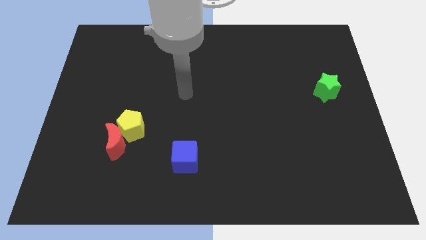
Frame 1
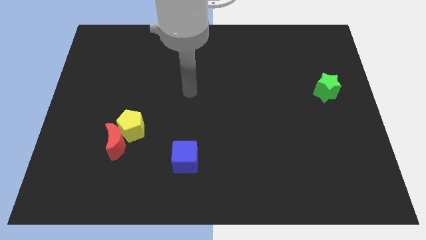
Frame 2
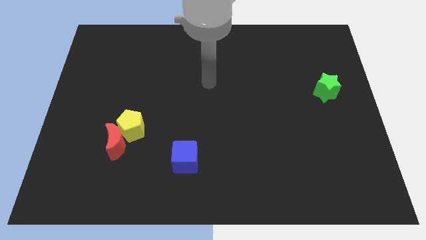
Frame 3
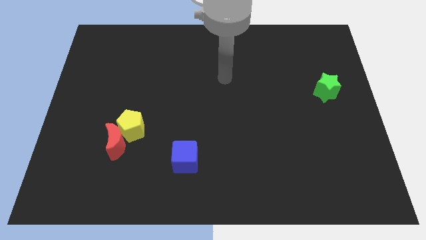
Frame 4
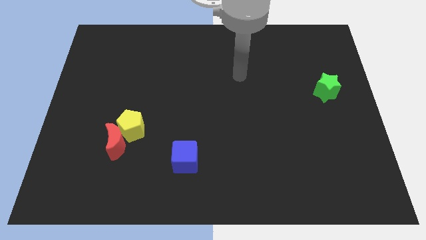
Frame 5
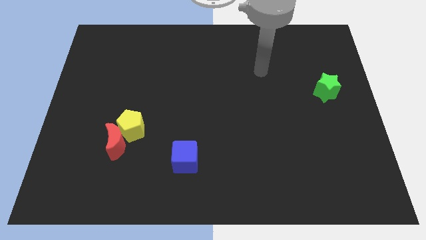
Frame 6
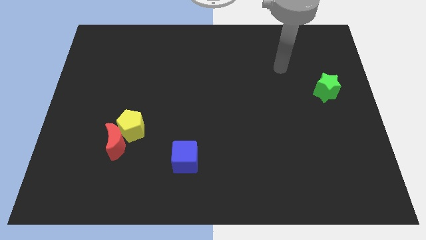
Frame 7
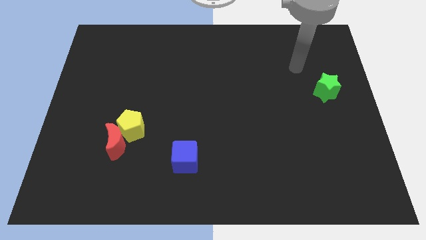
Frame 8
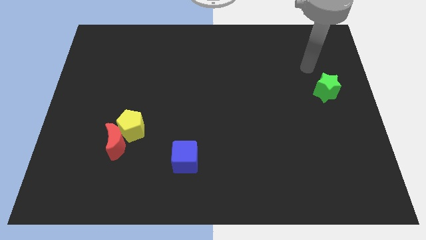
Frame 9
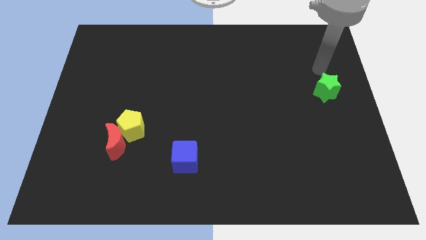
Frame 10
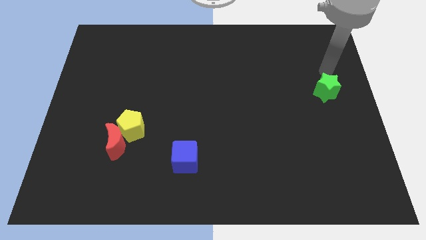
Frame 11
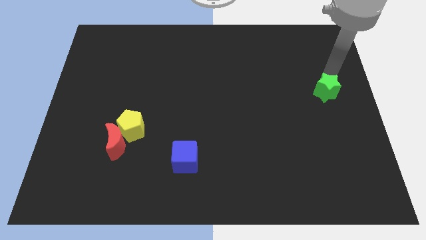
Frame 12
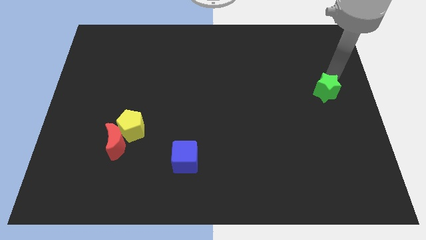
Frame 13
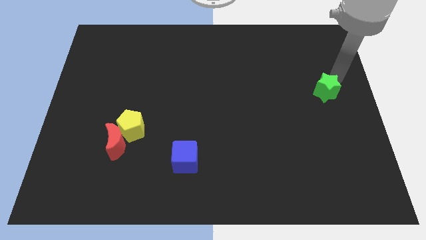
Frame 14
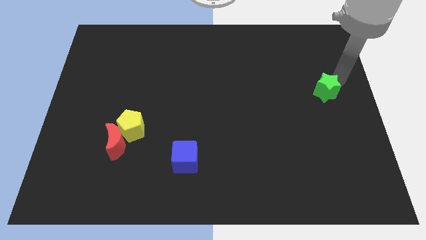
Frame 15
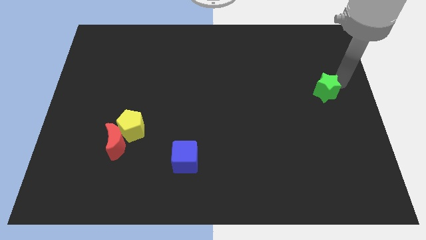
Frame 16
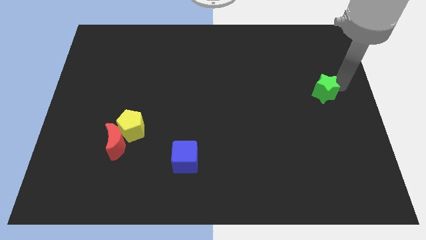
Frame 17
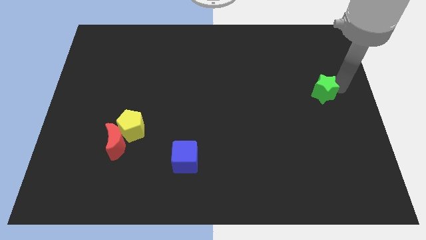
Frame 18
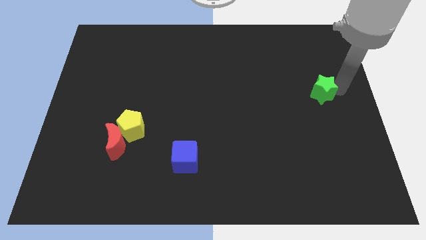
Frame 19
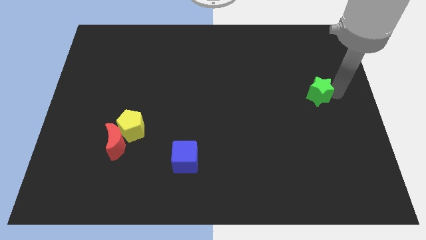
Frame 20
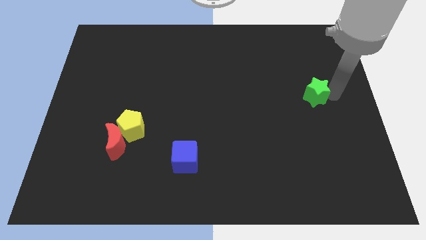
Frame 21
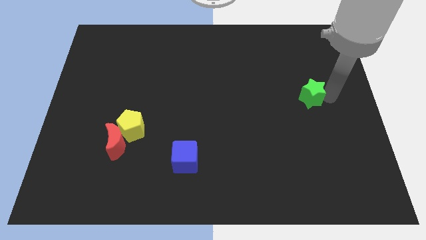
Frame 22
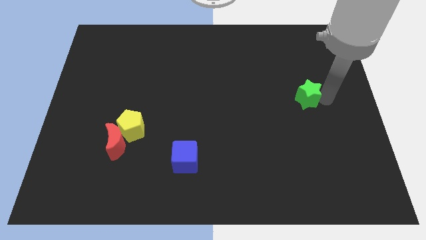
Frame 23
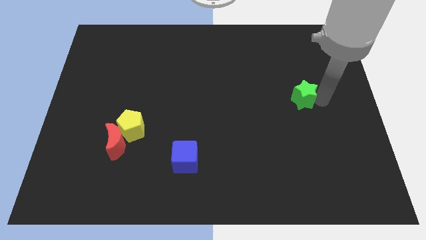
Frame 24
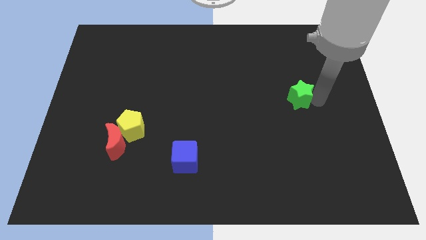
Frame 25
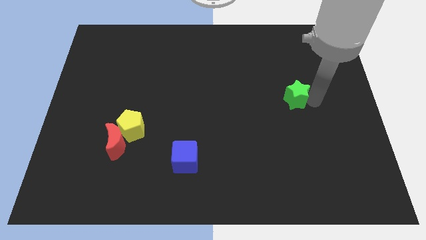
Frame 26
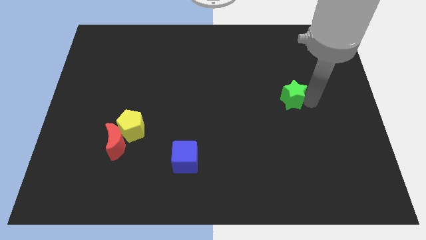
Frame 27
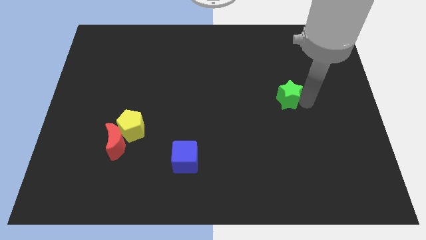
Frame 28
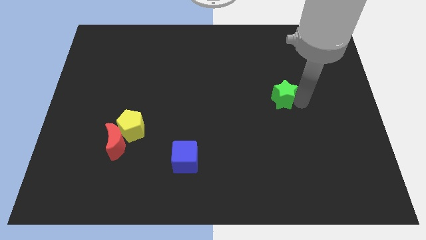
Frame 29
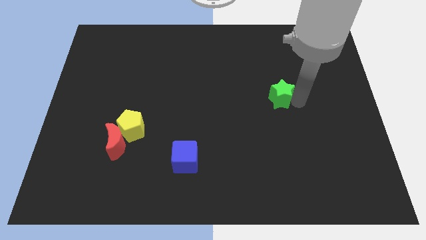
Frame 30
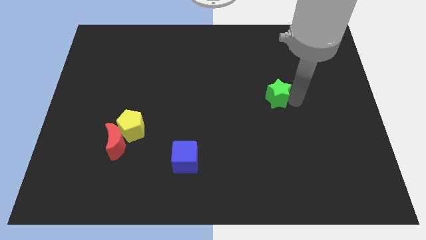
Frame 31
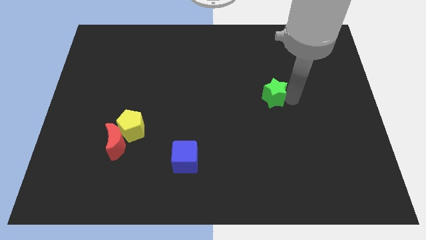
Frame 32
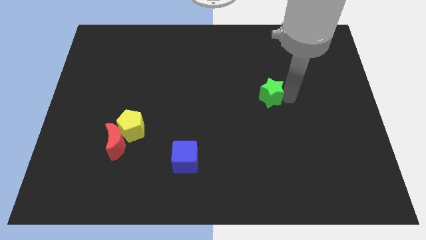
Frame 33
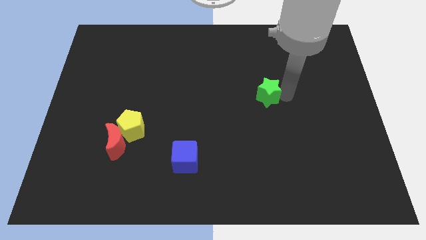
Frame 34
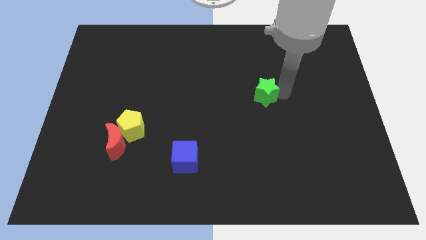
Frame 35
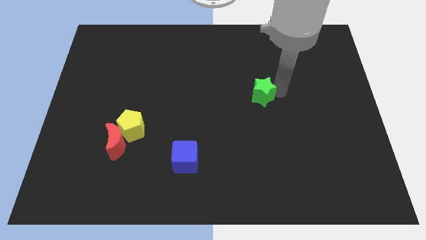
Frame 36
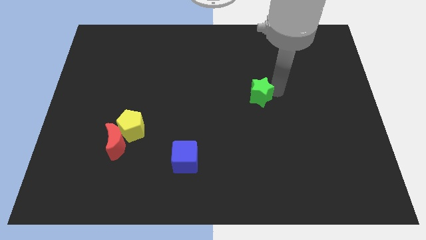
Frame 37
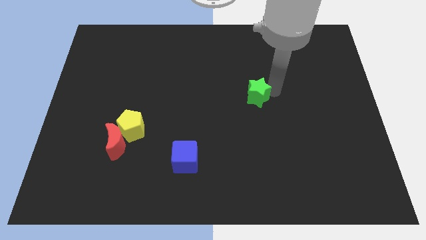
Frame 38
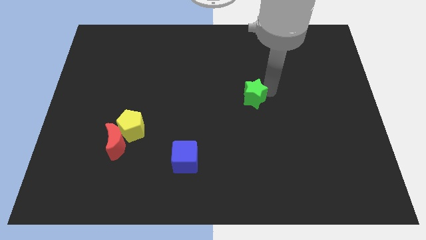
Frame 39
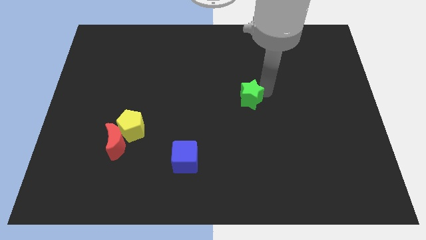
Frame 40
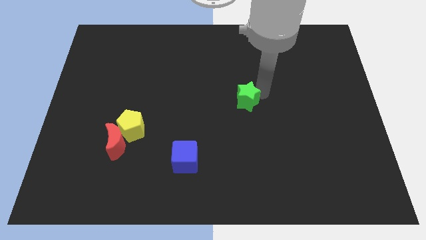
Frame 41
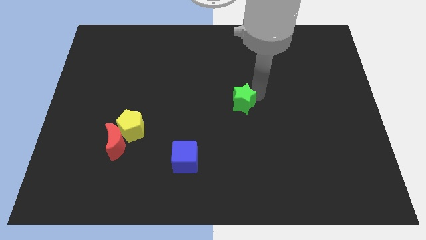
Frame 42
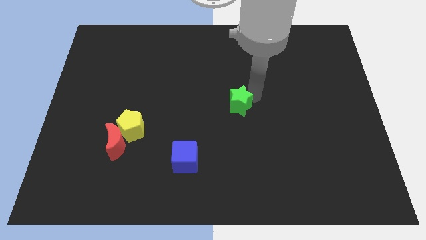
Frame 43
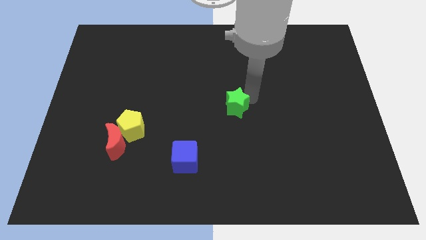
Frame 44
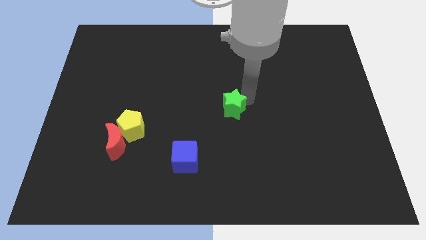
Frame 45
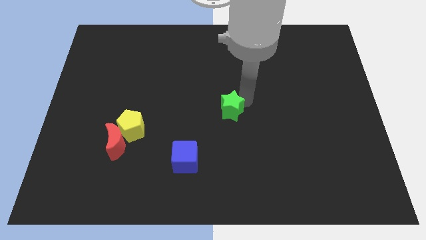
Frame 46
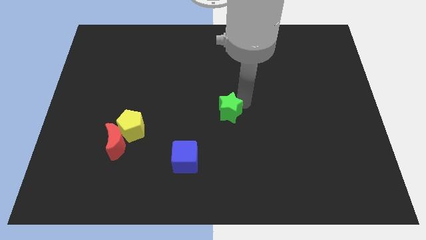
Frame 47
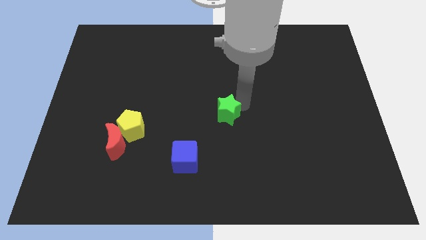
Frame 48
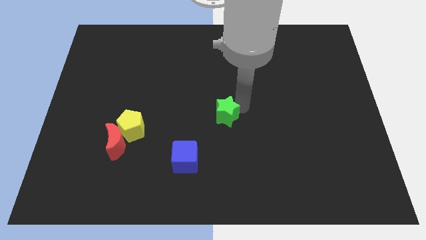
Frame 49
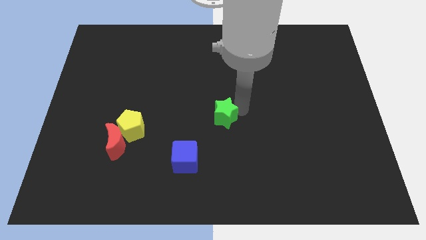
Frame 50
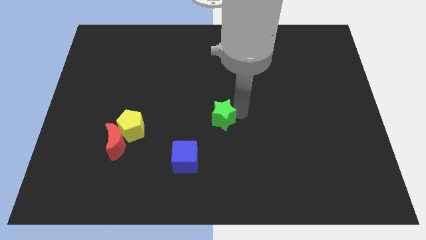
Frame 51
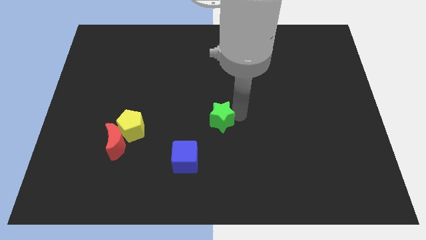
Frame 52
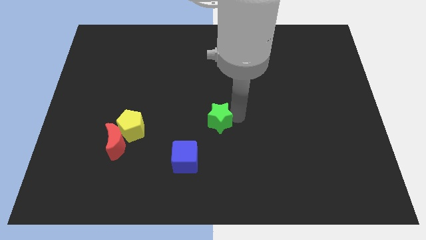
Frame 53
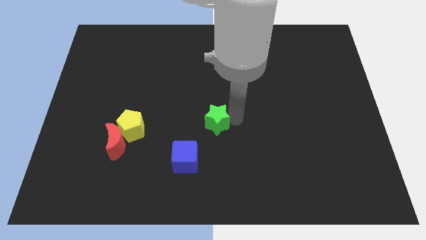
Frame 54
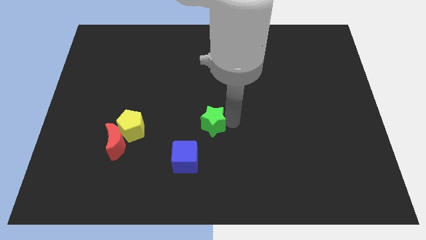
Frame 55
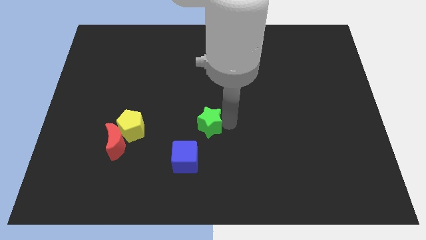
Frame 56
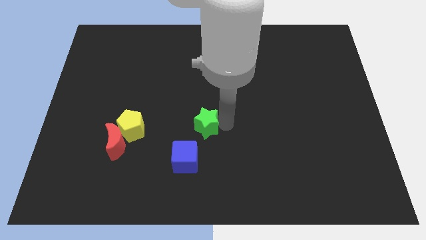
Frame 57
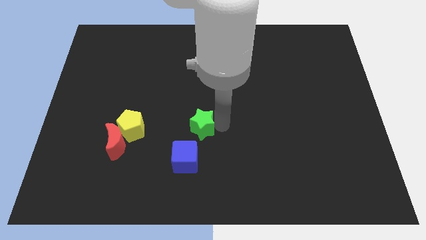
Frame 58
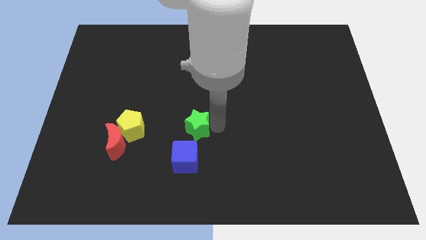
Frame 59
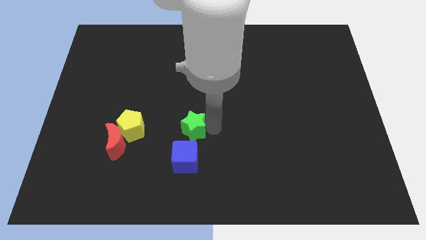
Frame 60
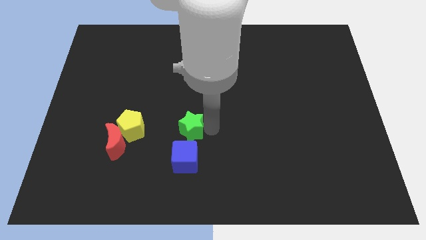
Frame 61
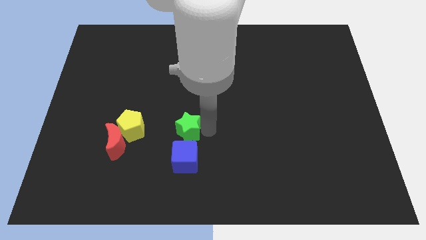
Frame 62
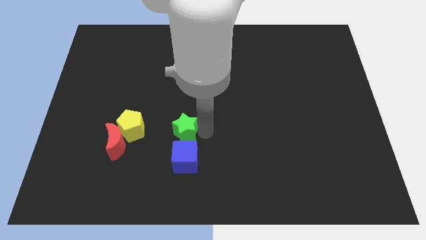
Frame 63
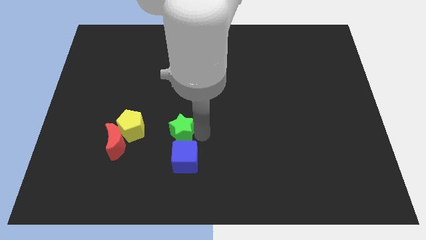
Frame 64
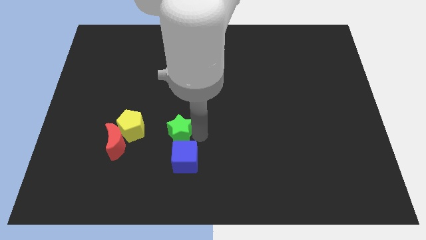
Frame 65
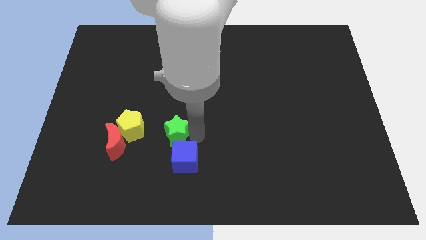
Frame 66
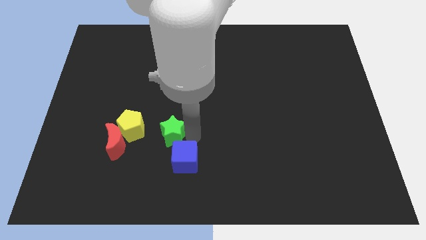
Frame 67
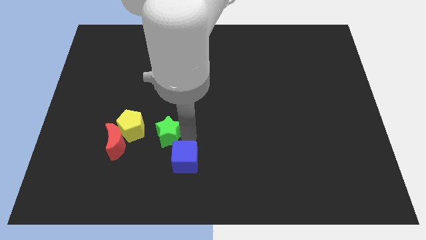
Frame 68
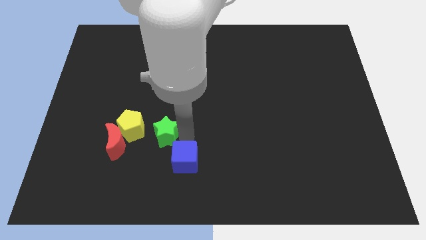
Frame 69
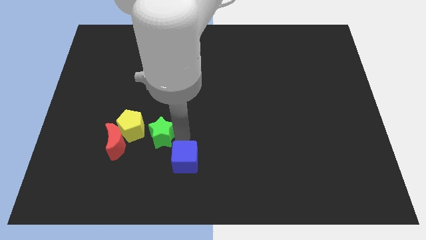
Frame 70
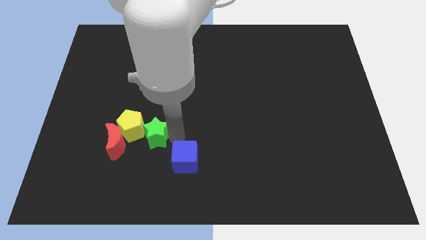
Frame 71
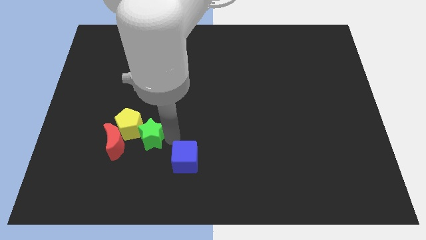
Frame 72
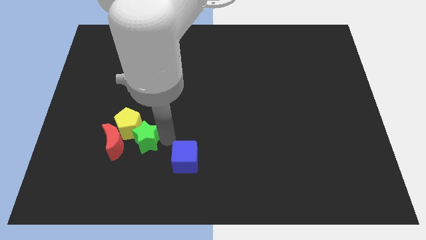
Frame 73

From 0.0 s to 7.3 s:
move the green block next to the pentagon

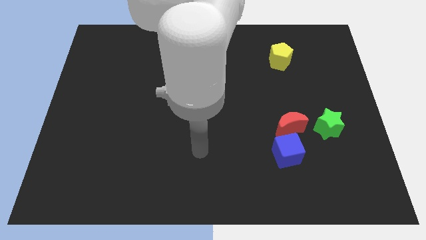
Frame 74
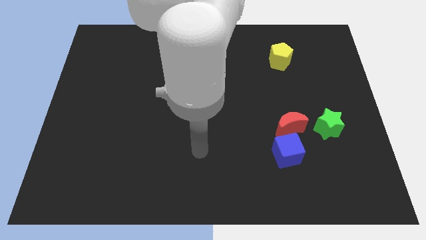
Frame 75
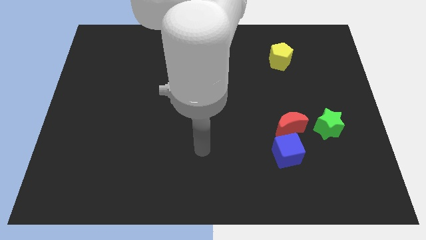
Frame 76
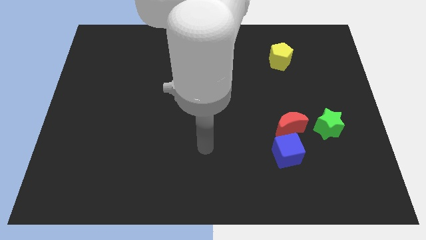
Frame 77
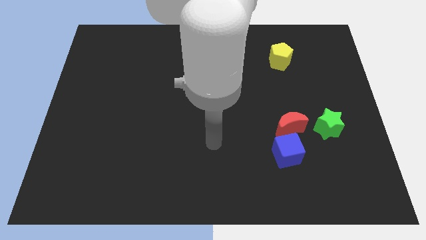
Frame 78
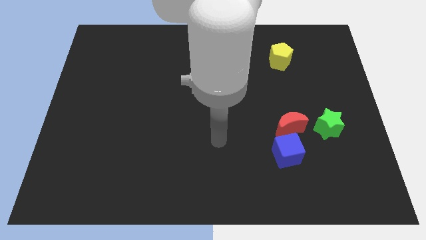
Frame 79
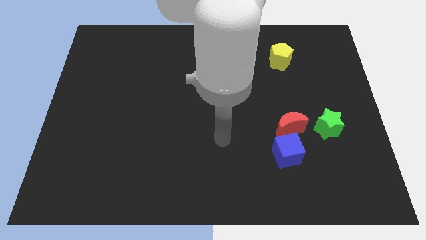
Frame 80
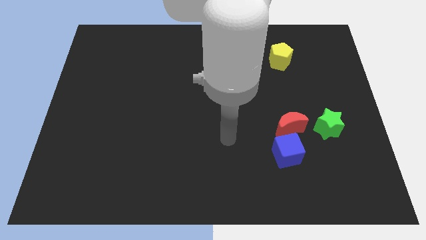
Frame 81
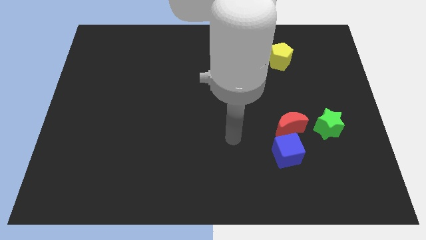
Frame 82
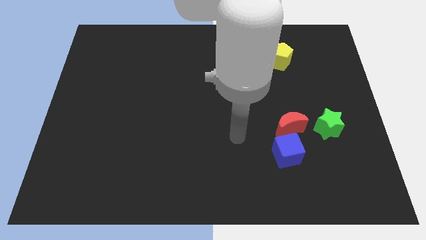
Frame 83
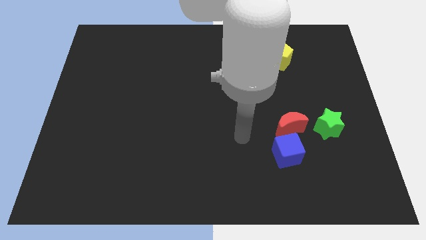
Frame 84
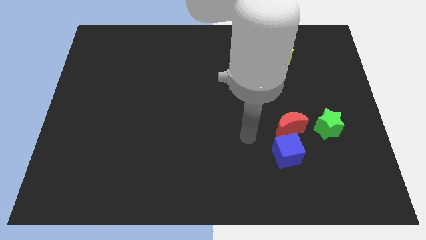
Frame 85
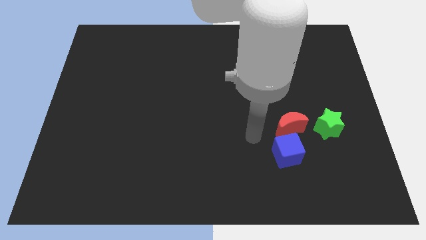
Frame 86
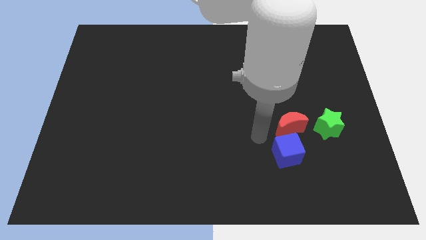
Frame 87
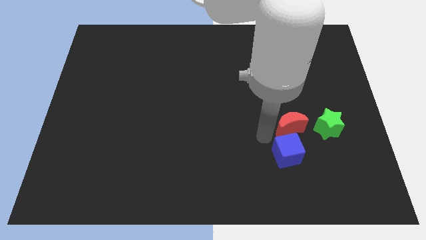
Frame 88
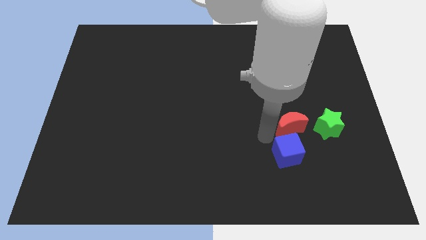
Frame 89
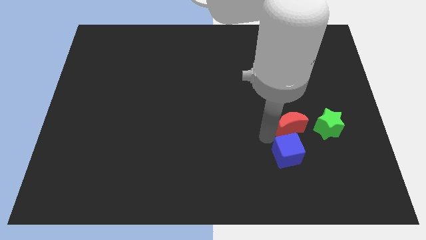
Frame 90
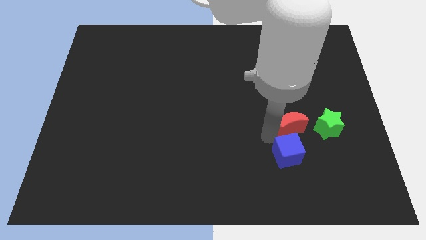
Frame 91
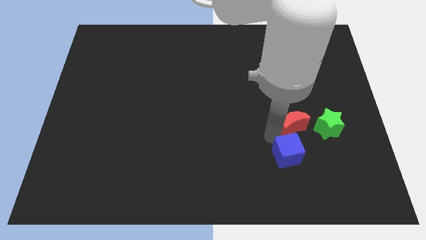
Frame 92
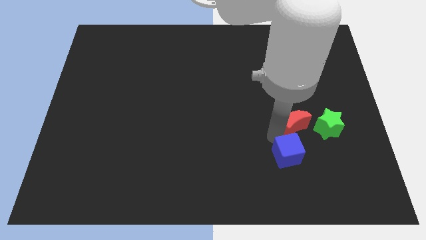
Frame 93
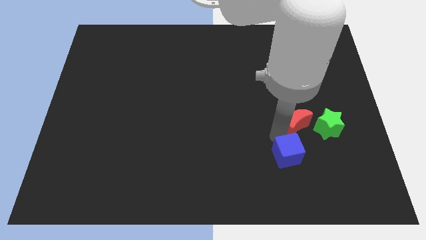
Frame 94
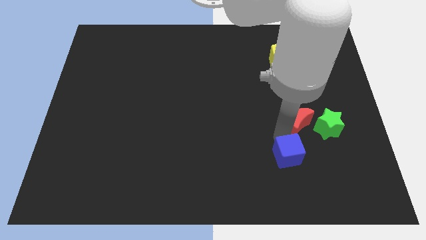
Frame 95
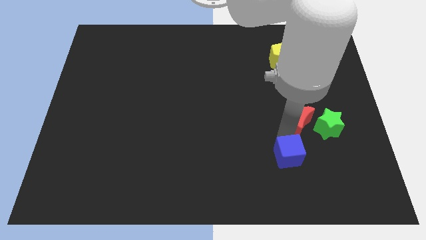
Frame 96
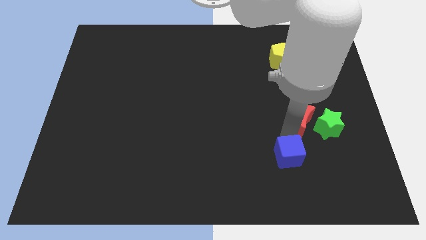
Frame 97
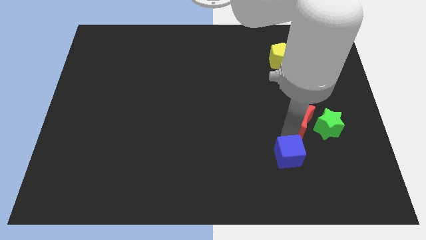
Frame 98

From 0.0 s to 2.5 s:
put the red moon next to the star
